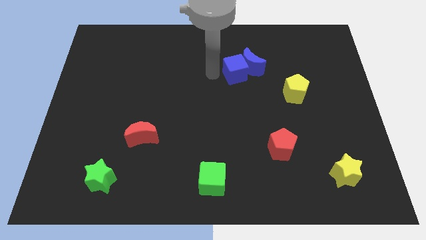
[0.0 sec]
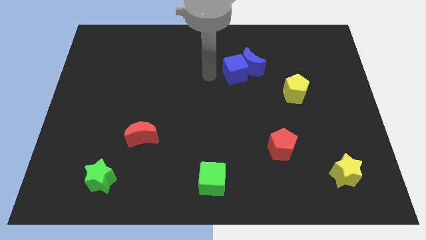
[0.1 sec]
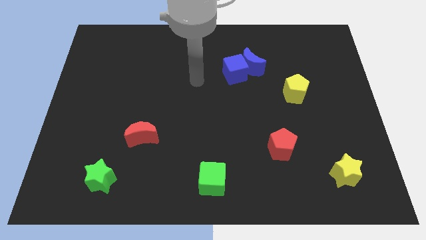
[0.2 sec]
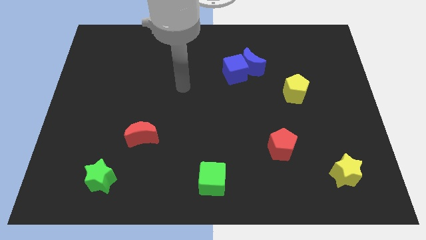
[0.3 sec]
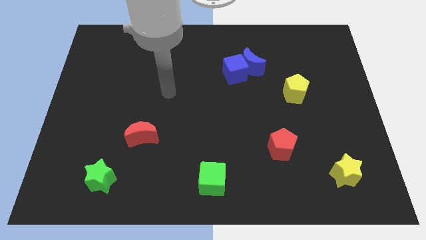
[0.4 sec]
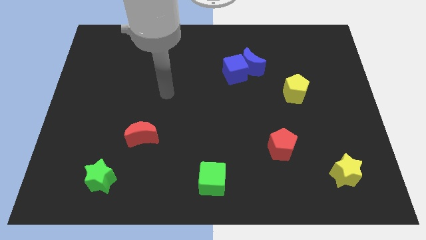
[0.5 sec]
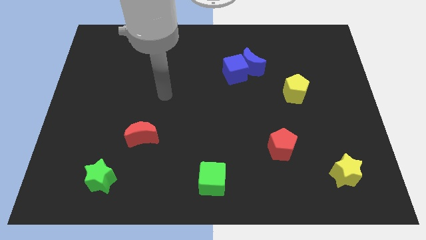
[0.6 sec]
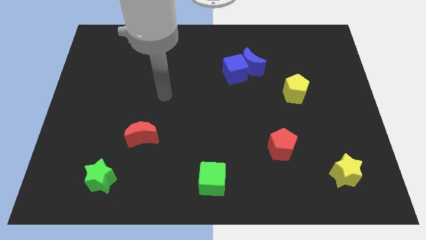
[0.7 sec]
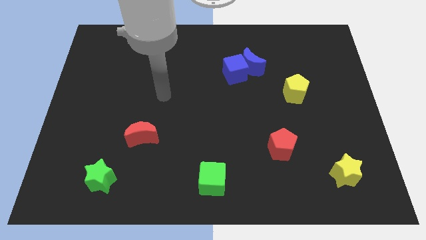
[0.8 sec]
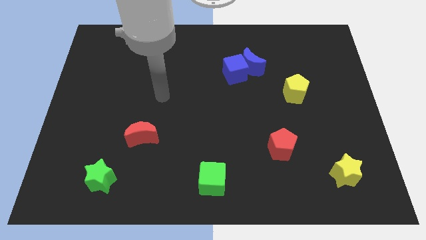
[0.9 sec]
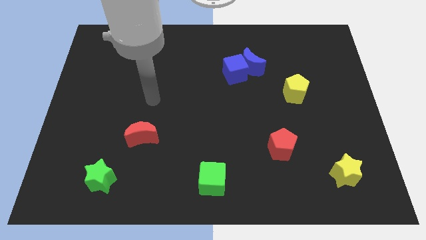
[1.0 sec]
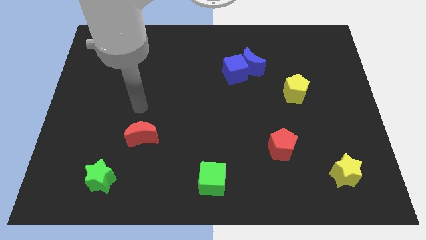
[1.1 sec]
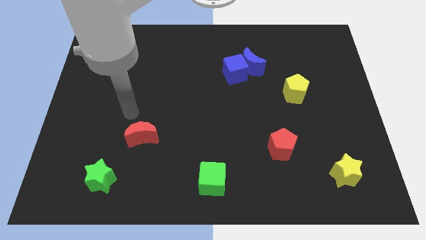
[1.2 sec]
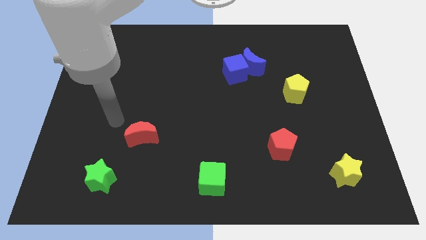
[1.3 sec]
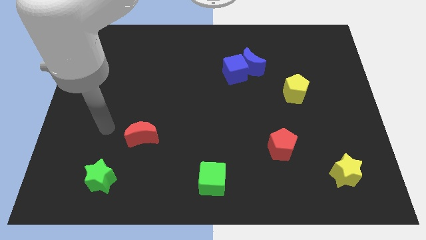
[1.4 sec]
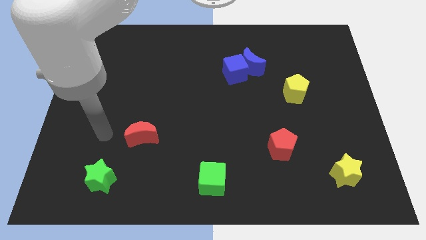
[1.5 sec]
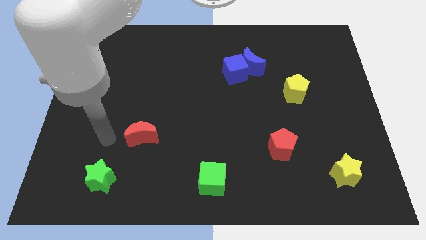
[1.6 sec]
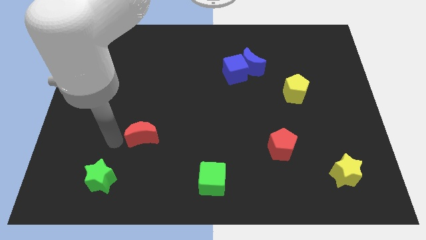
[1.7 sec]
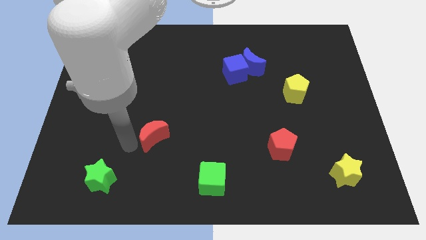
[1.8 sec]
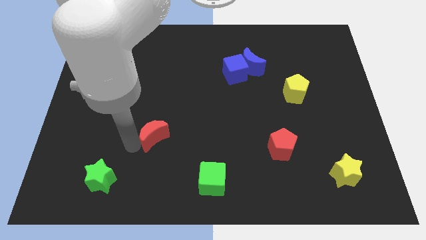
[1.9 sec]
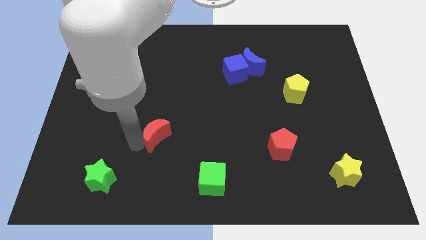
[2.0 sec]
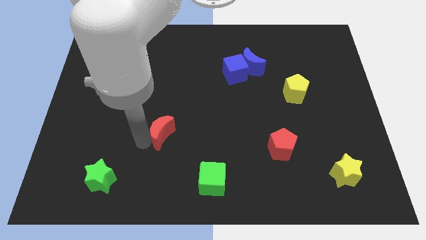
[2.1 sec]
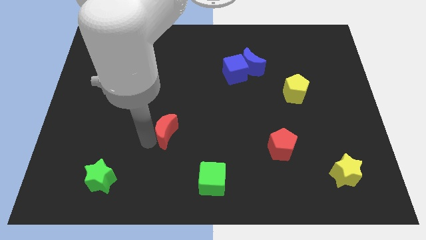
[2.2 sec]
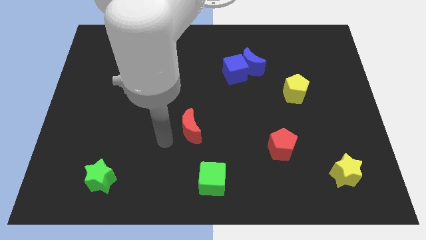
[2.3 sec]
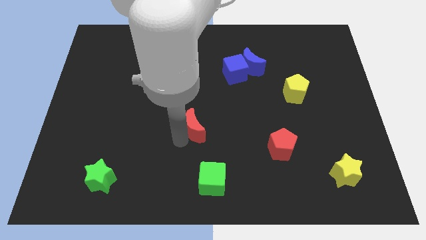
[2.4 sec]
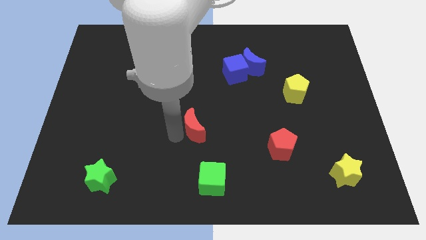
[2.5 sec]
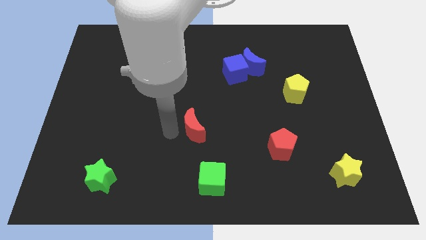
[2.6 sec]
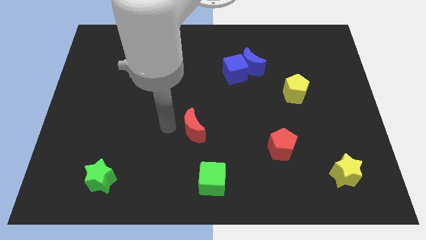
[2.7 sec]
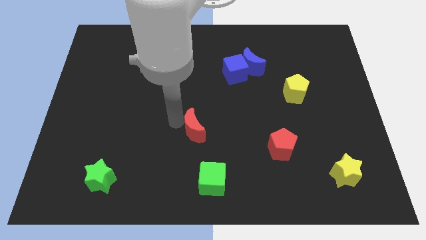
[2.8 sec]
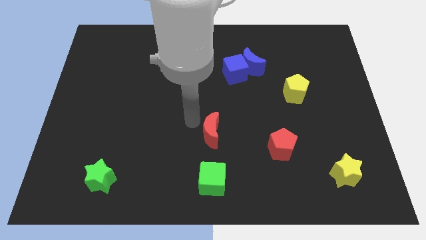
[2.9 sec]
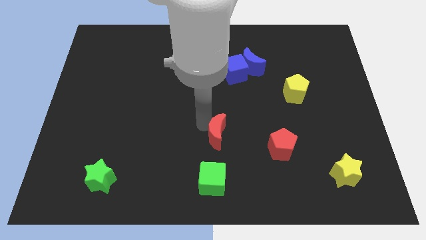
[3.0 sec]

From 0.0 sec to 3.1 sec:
push the red crescent to the top of the green cube

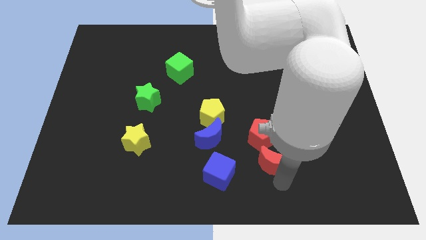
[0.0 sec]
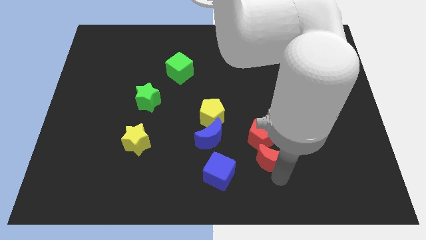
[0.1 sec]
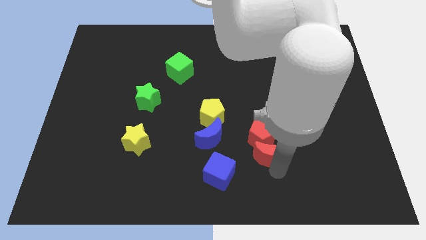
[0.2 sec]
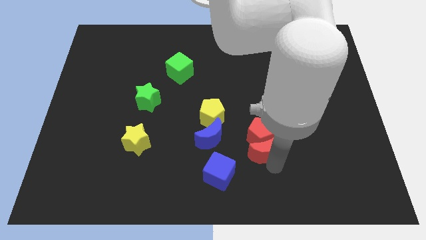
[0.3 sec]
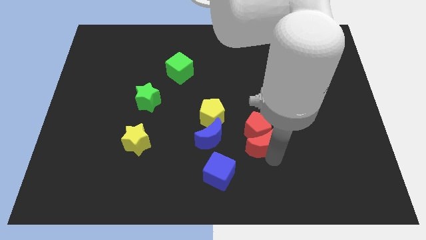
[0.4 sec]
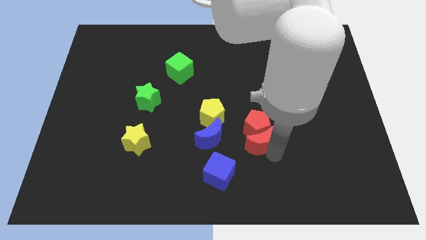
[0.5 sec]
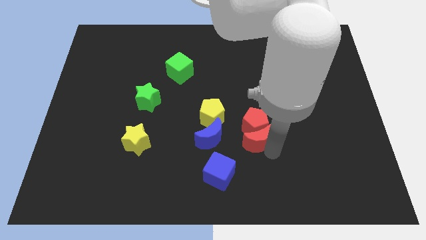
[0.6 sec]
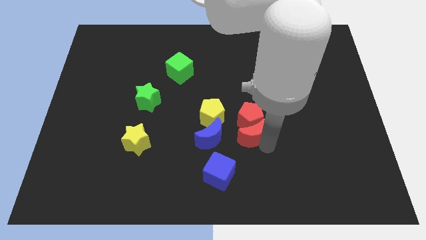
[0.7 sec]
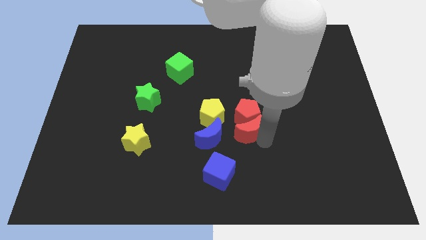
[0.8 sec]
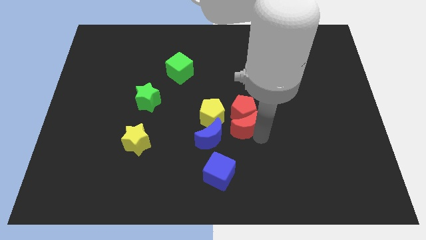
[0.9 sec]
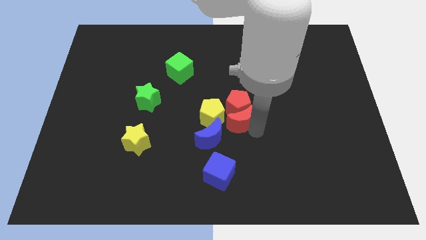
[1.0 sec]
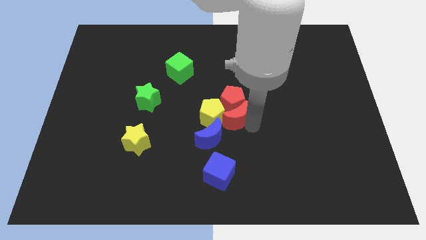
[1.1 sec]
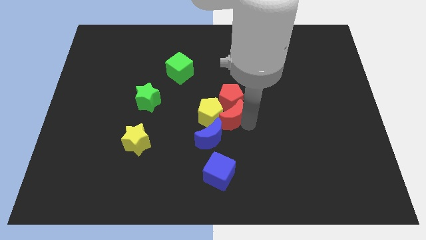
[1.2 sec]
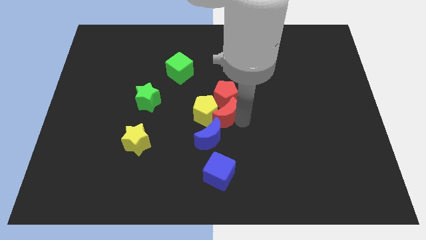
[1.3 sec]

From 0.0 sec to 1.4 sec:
push the red pentagon and red crescent towards the center of the board

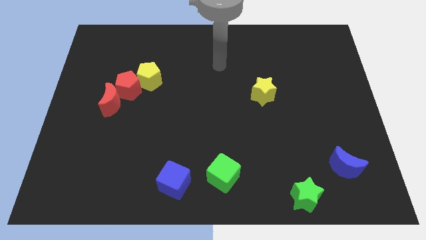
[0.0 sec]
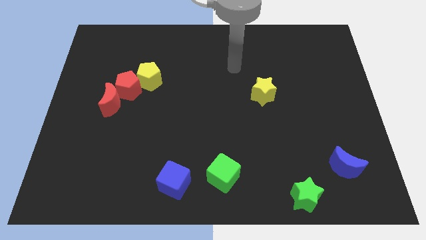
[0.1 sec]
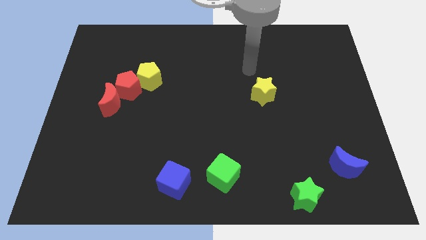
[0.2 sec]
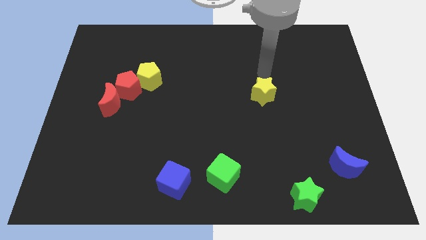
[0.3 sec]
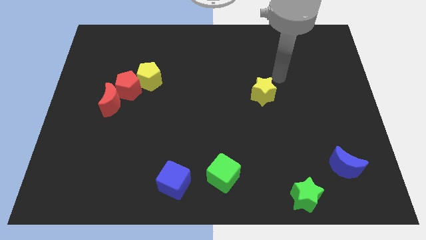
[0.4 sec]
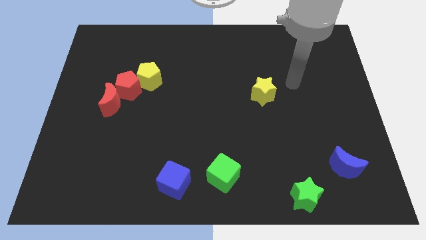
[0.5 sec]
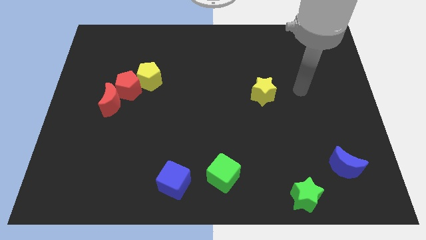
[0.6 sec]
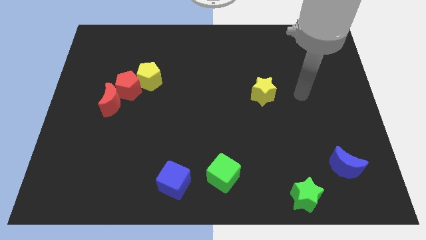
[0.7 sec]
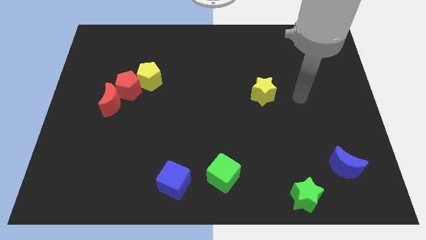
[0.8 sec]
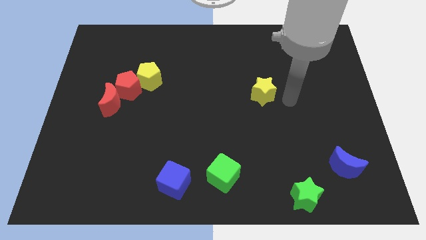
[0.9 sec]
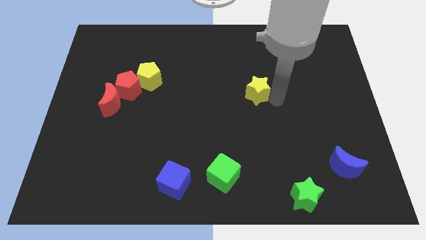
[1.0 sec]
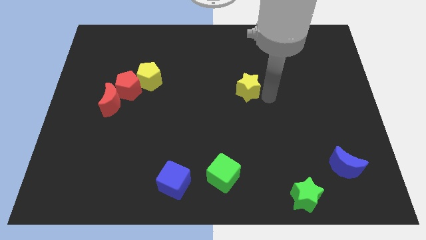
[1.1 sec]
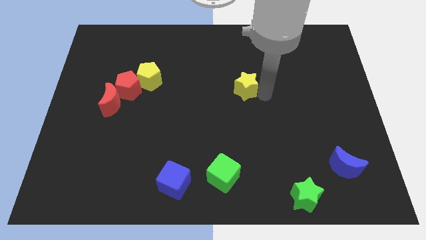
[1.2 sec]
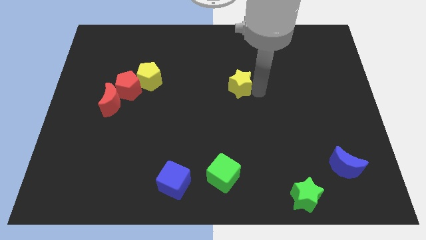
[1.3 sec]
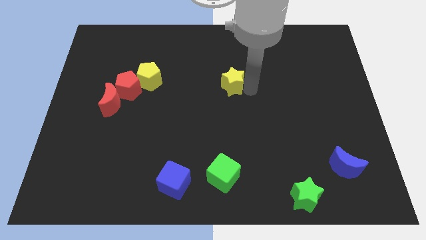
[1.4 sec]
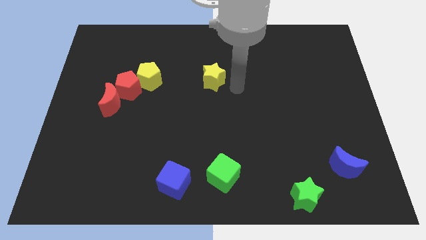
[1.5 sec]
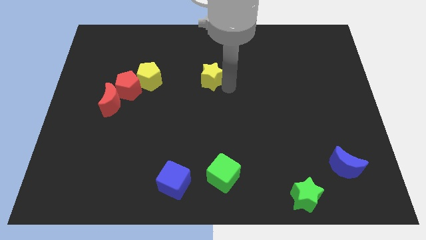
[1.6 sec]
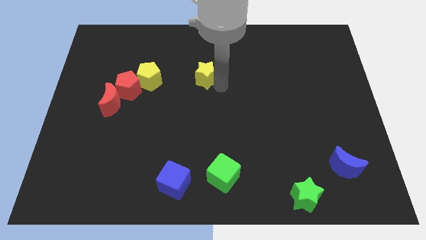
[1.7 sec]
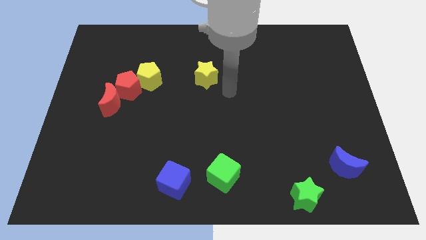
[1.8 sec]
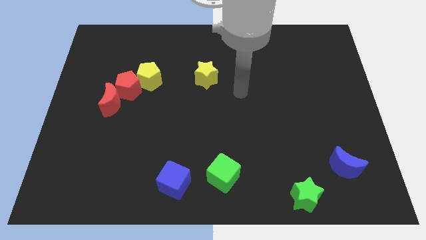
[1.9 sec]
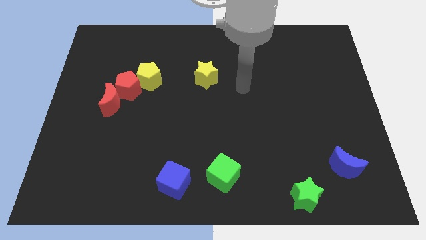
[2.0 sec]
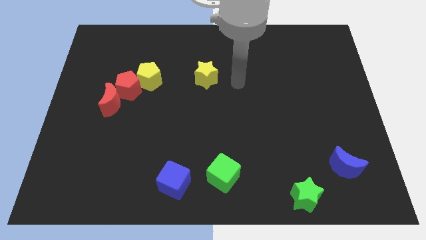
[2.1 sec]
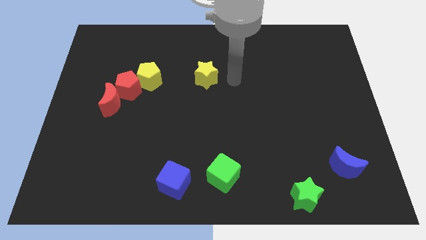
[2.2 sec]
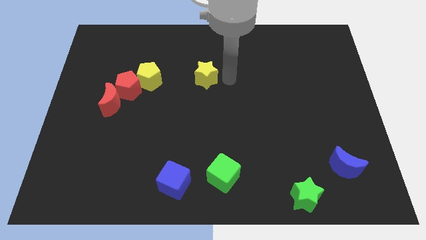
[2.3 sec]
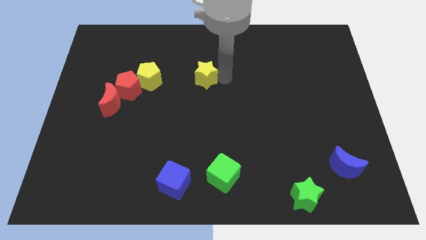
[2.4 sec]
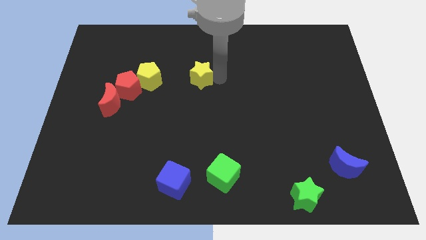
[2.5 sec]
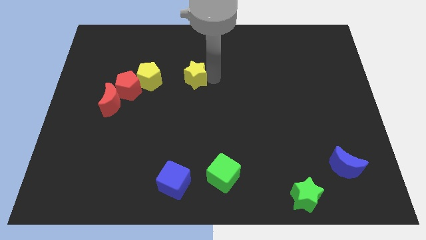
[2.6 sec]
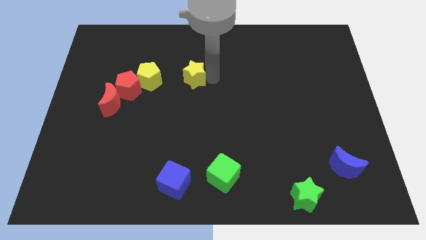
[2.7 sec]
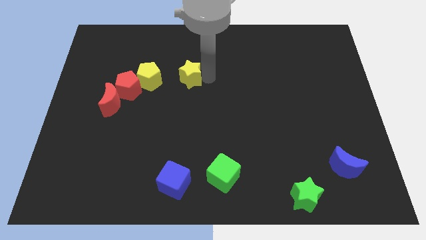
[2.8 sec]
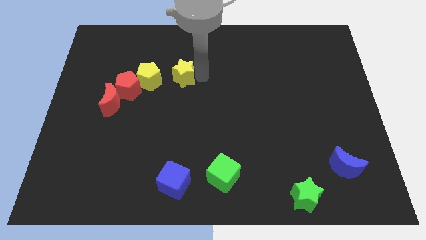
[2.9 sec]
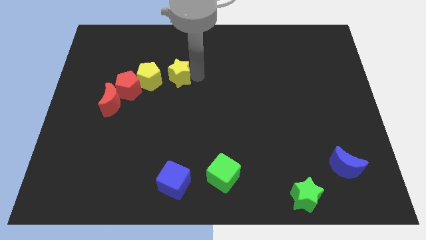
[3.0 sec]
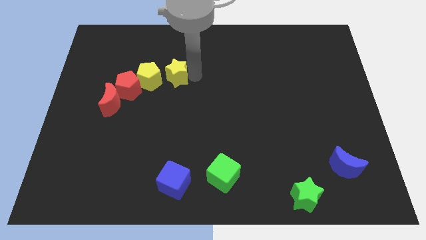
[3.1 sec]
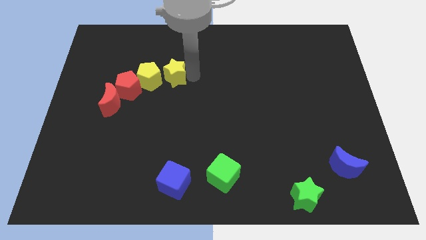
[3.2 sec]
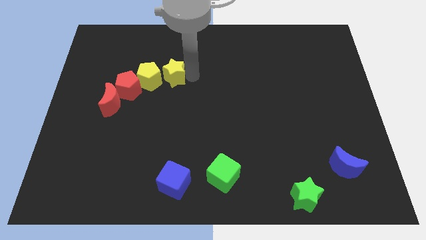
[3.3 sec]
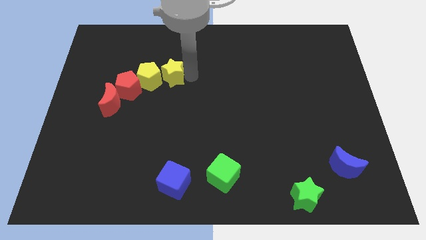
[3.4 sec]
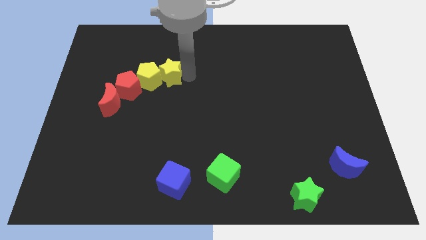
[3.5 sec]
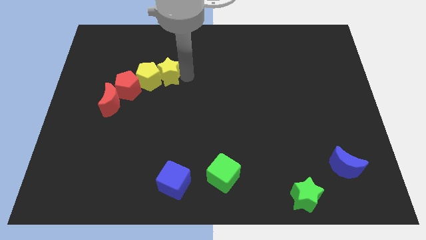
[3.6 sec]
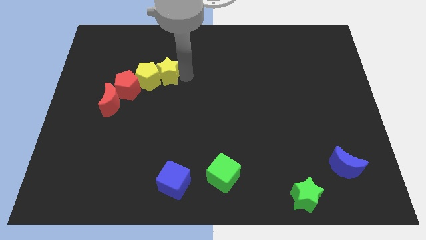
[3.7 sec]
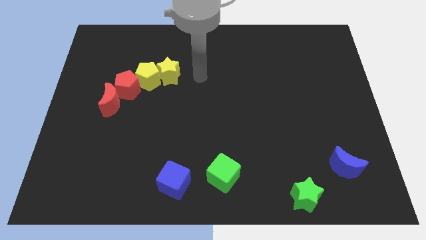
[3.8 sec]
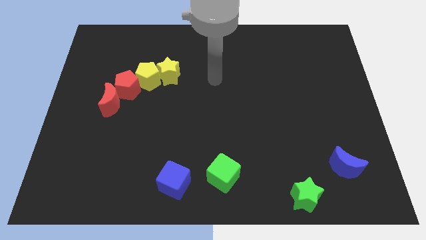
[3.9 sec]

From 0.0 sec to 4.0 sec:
push the yellow star into the yellow pentagon

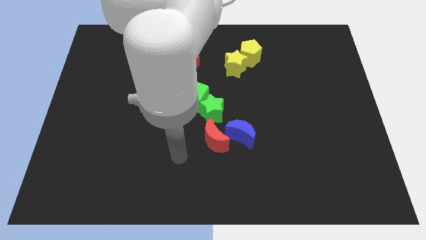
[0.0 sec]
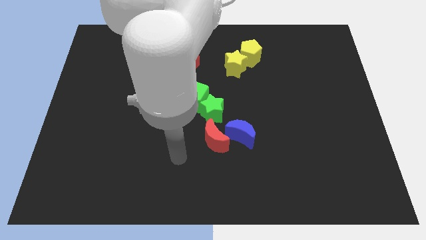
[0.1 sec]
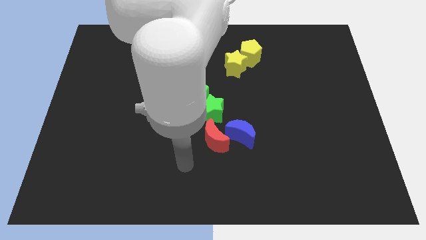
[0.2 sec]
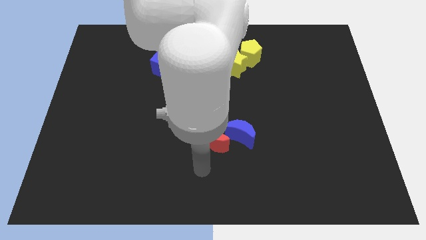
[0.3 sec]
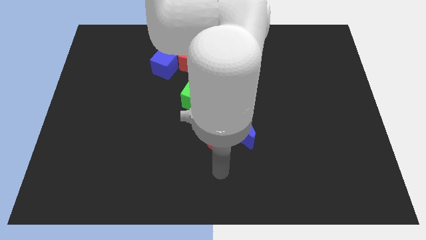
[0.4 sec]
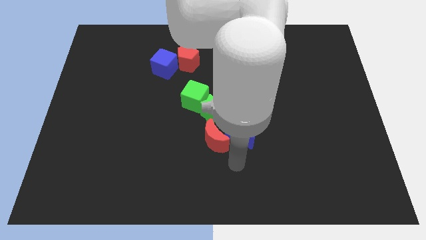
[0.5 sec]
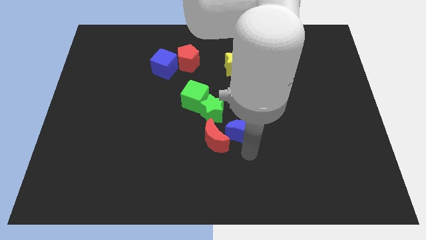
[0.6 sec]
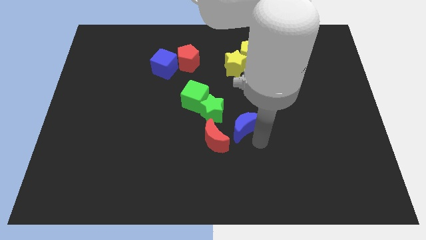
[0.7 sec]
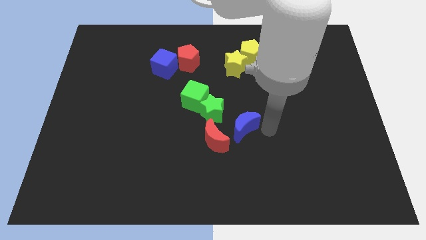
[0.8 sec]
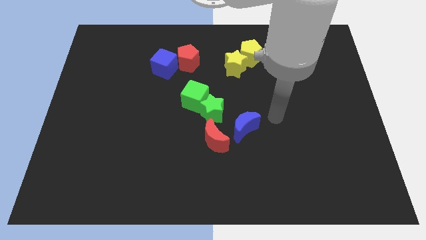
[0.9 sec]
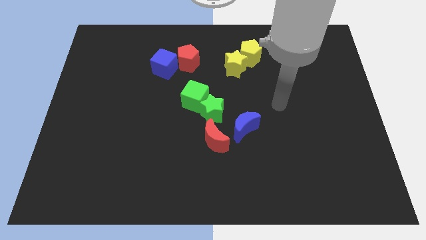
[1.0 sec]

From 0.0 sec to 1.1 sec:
push the blue moon up slightly
